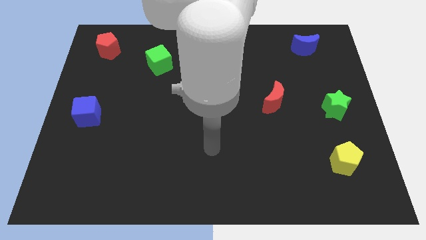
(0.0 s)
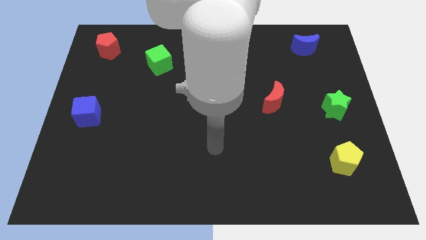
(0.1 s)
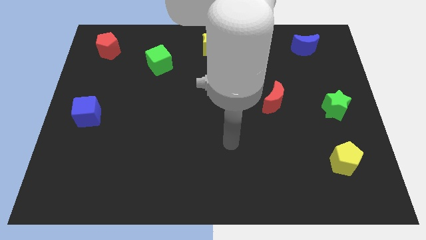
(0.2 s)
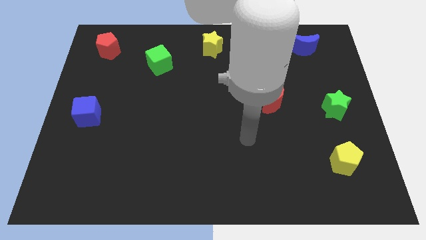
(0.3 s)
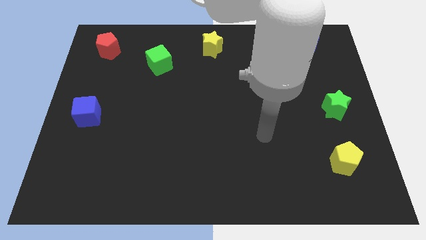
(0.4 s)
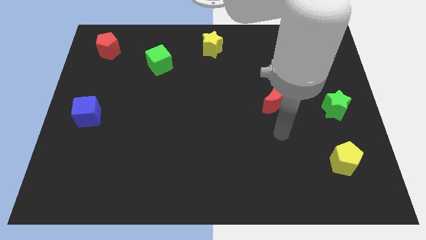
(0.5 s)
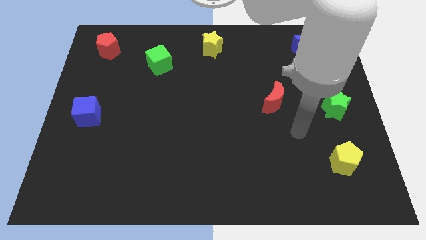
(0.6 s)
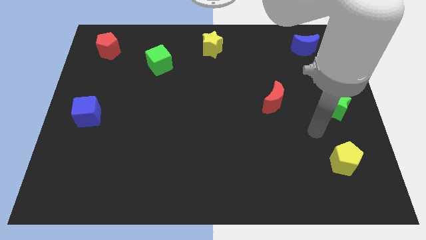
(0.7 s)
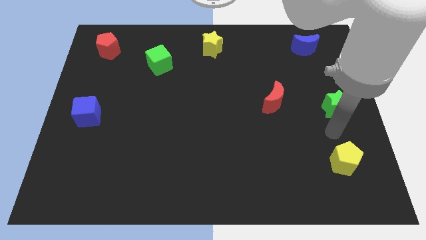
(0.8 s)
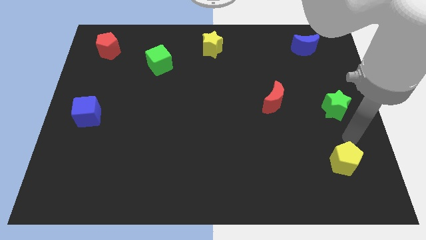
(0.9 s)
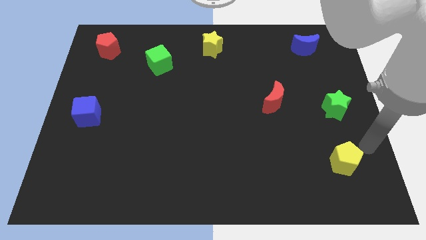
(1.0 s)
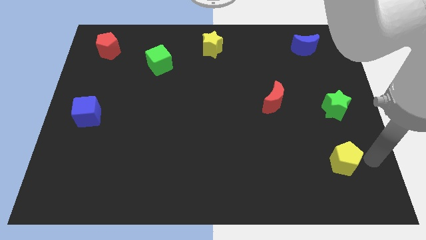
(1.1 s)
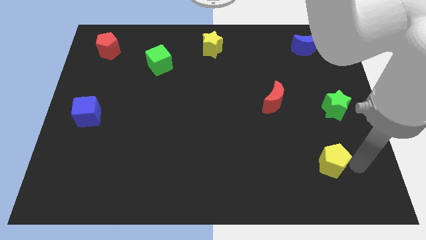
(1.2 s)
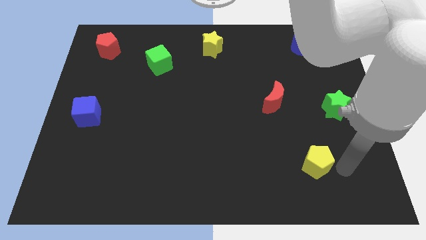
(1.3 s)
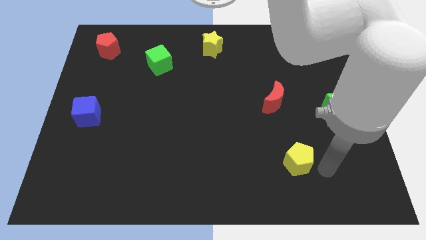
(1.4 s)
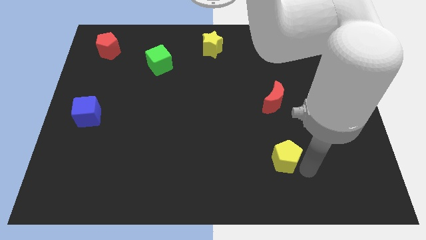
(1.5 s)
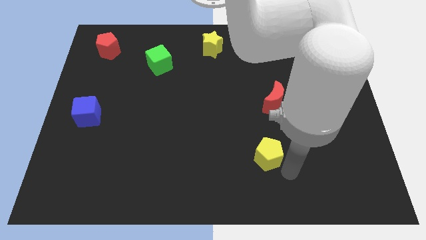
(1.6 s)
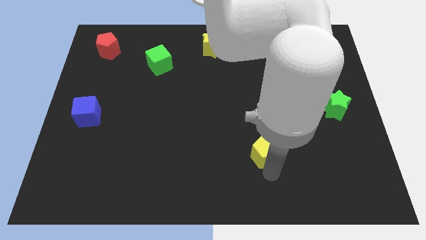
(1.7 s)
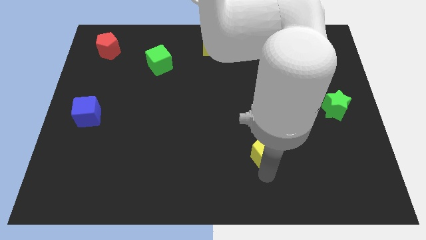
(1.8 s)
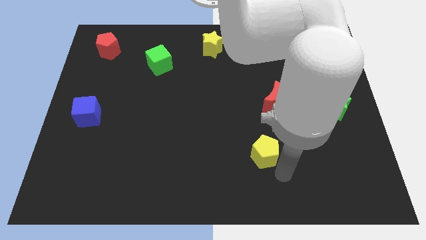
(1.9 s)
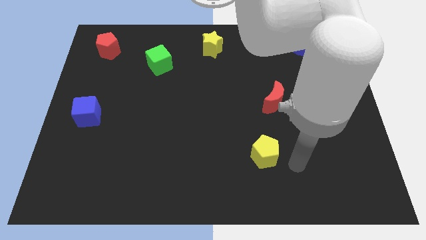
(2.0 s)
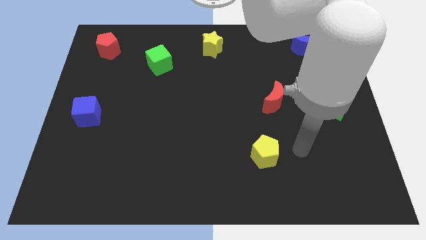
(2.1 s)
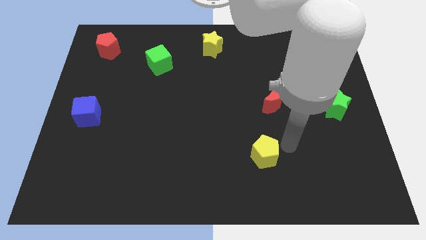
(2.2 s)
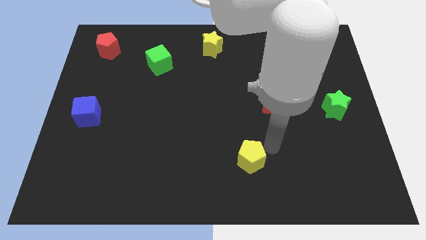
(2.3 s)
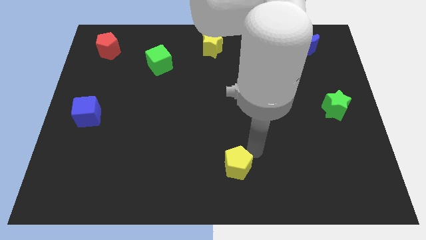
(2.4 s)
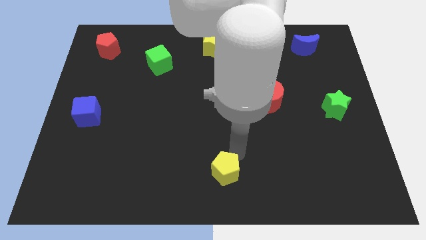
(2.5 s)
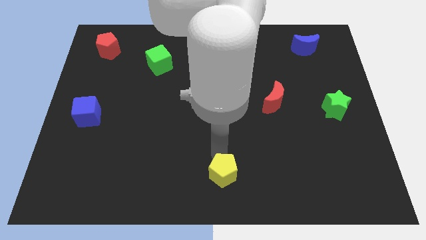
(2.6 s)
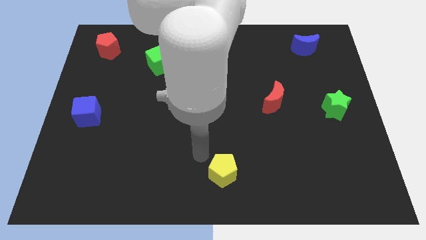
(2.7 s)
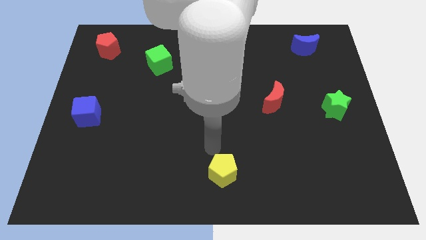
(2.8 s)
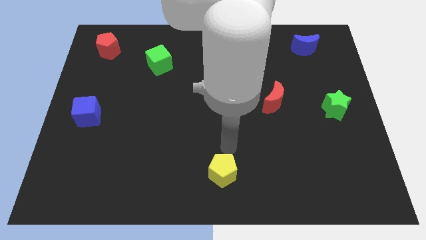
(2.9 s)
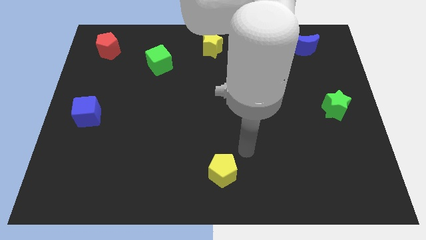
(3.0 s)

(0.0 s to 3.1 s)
slide yellow pentagon towards bottom center

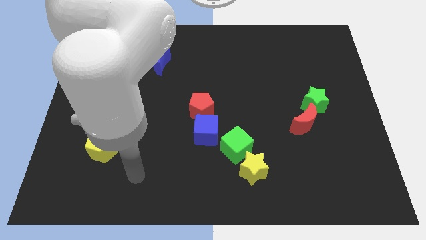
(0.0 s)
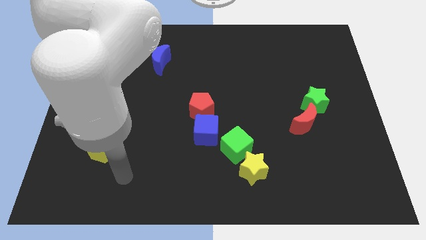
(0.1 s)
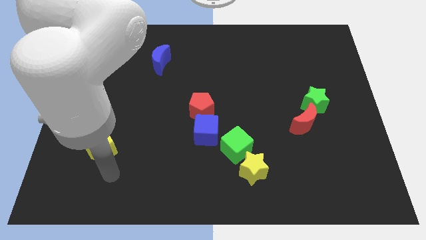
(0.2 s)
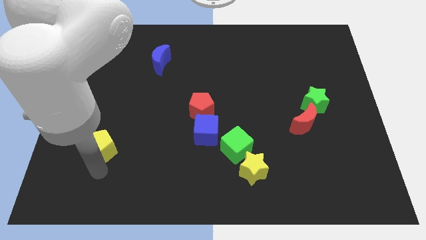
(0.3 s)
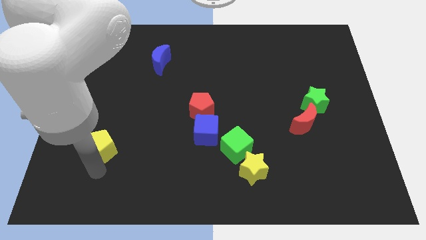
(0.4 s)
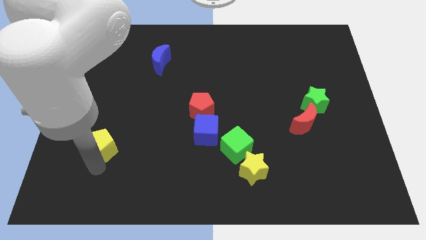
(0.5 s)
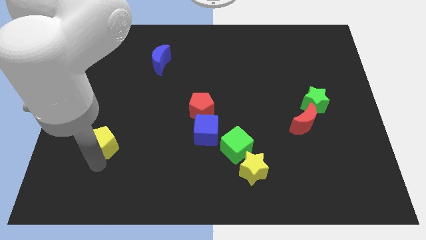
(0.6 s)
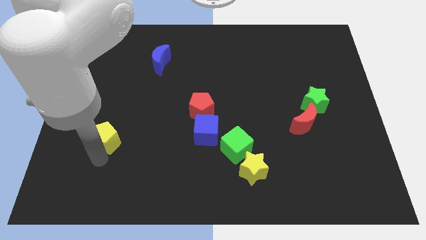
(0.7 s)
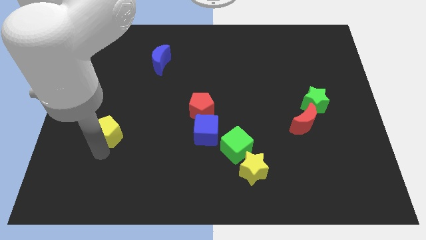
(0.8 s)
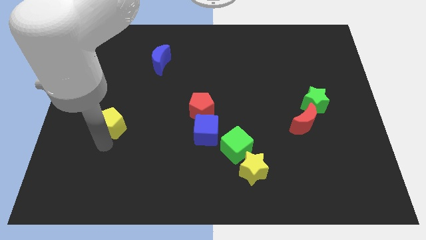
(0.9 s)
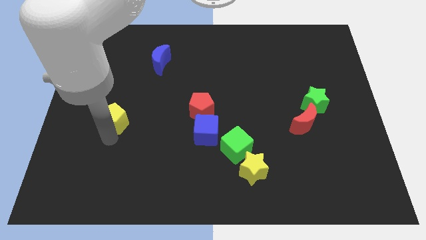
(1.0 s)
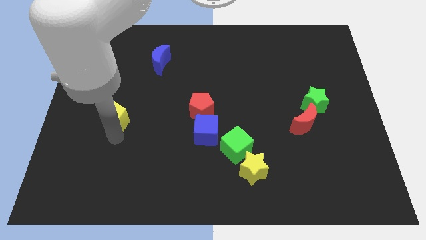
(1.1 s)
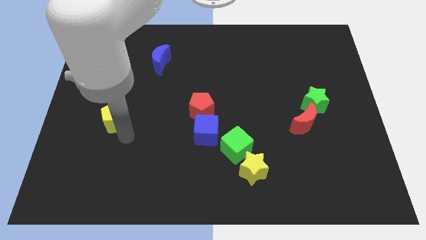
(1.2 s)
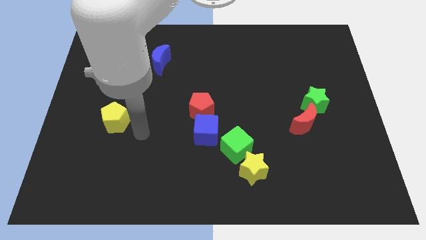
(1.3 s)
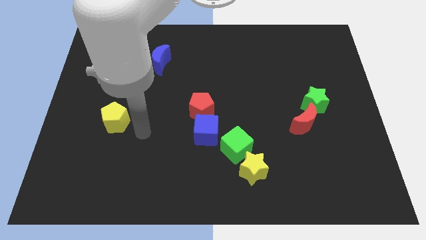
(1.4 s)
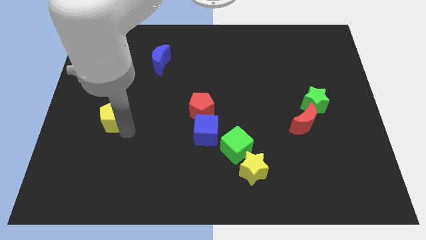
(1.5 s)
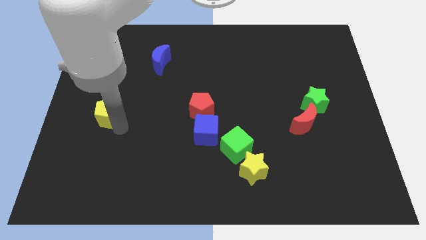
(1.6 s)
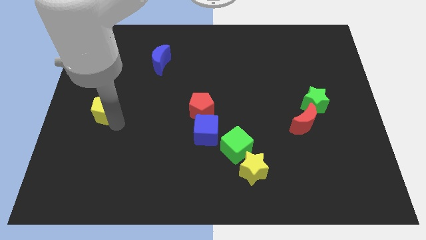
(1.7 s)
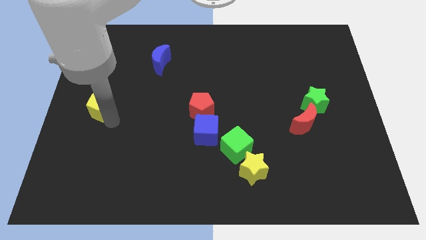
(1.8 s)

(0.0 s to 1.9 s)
place the yellow pentagon parallel to red pentagon

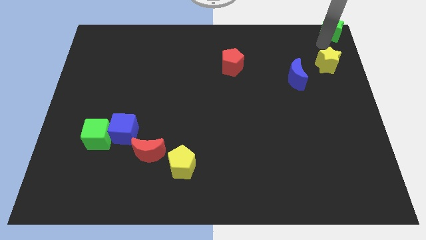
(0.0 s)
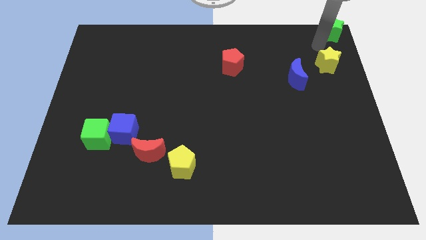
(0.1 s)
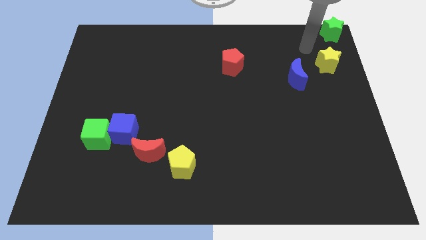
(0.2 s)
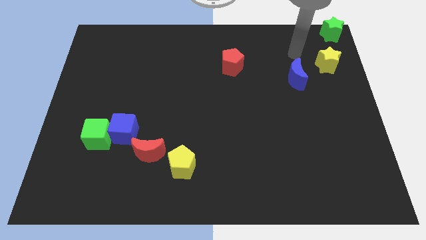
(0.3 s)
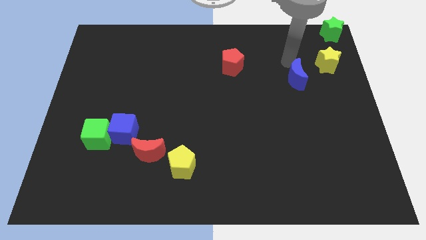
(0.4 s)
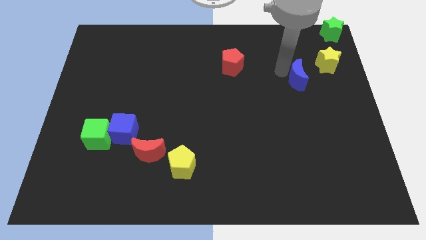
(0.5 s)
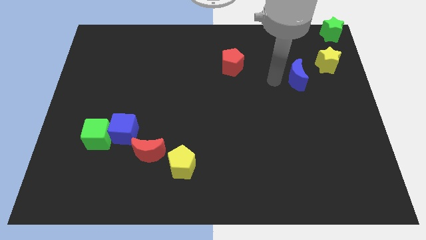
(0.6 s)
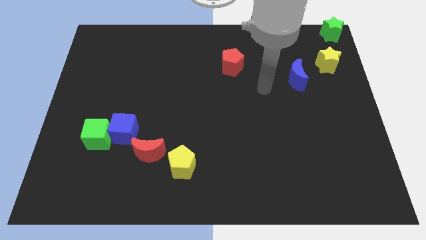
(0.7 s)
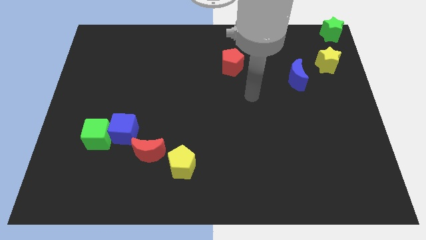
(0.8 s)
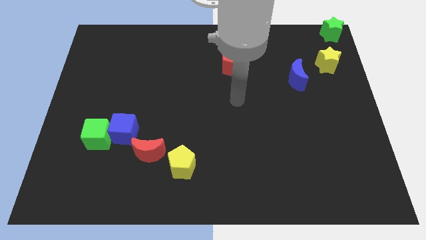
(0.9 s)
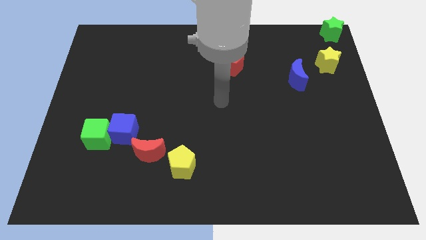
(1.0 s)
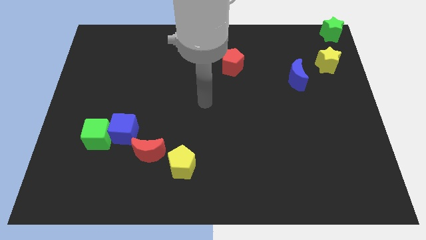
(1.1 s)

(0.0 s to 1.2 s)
touch the blue moon at the left side

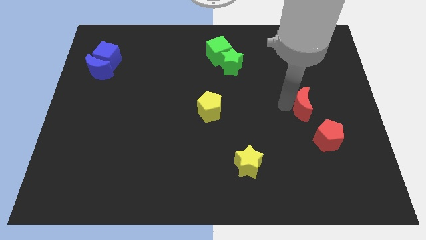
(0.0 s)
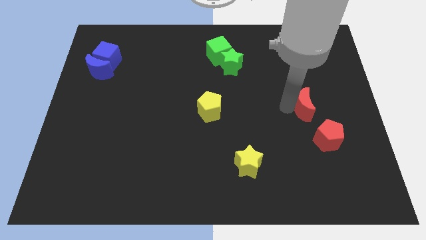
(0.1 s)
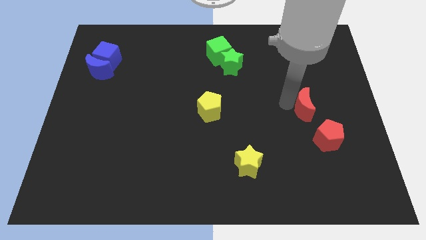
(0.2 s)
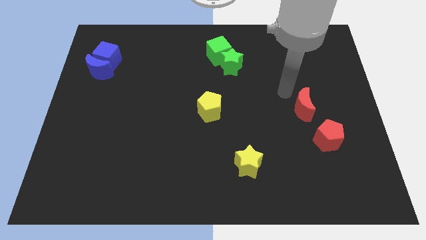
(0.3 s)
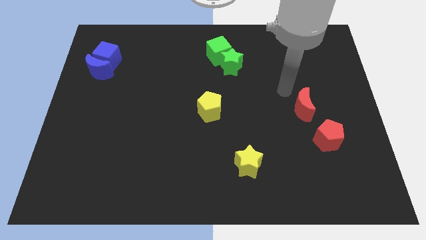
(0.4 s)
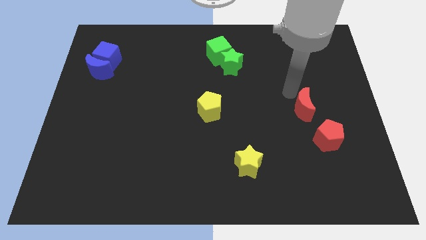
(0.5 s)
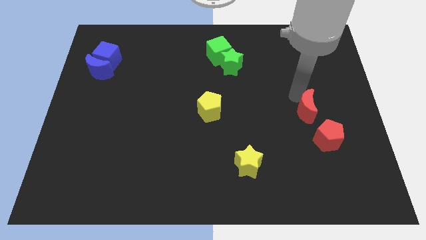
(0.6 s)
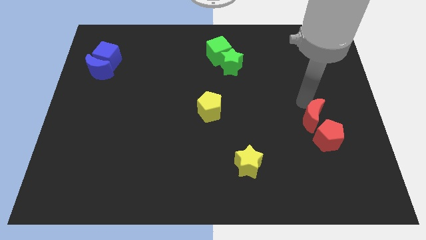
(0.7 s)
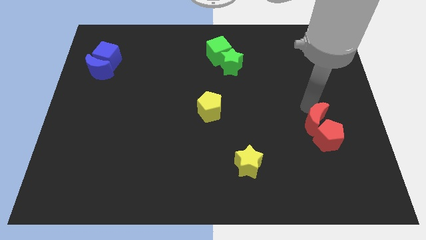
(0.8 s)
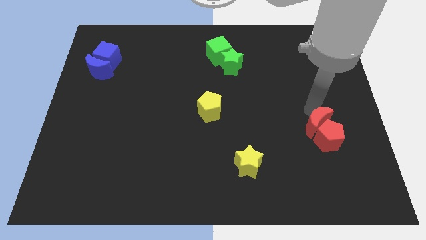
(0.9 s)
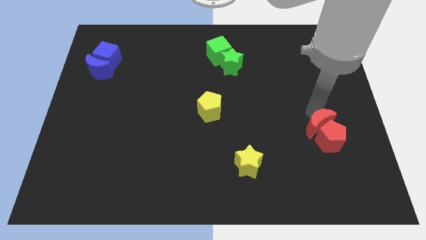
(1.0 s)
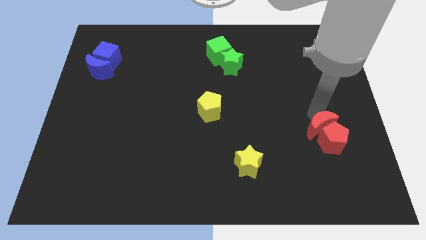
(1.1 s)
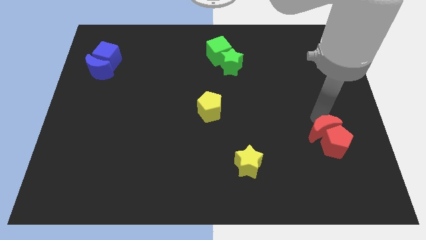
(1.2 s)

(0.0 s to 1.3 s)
push the red moon into the red pentagon

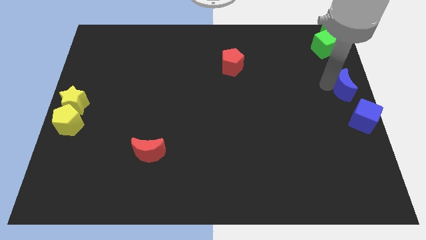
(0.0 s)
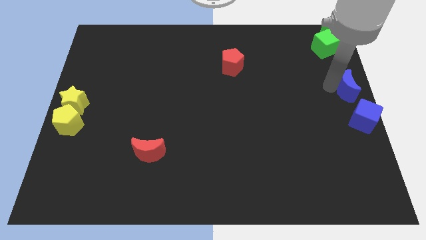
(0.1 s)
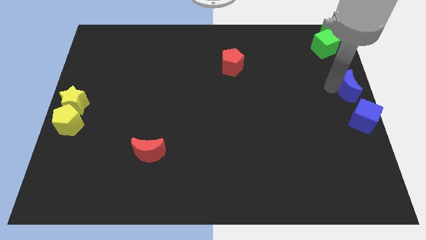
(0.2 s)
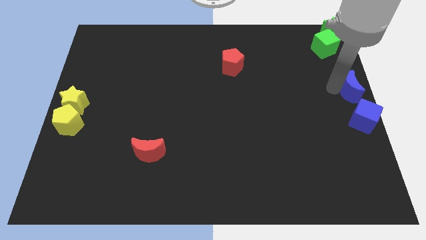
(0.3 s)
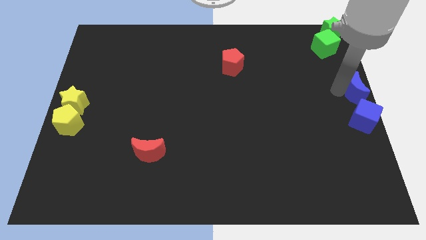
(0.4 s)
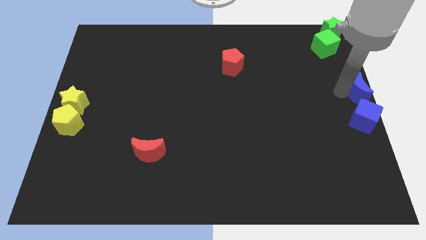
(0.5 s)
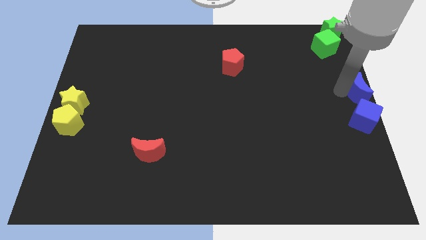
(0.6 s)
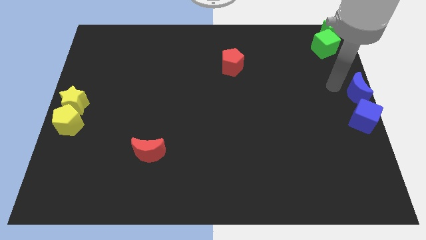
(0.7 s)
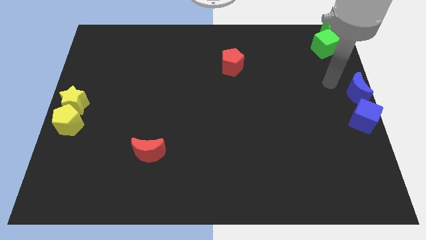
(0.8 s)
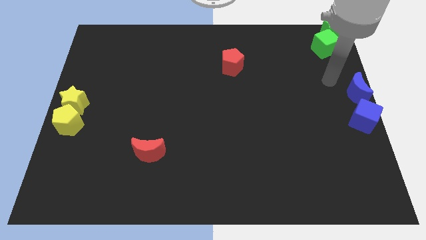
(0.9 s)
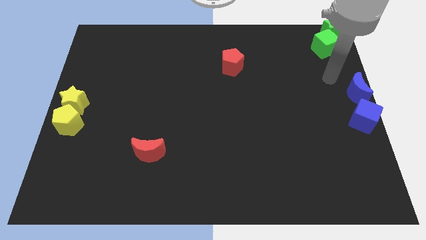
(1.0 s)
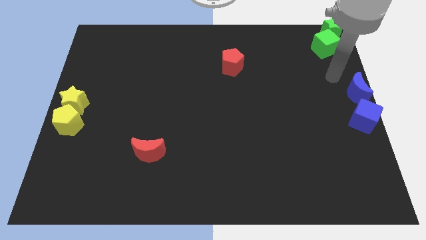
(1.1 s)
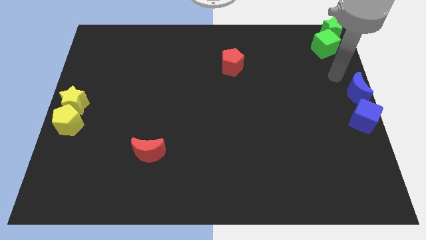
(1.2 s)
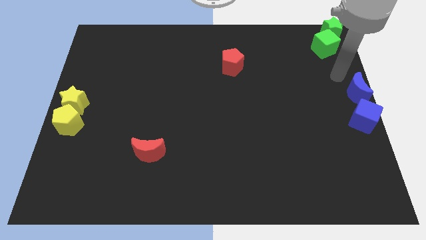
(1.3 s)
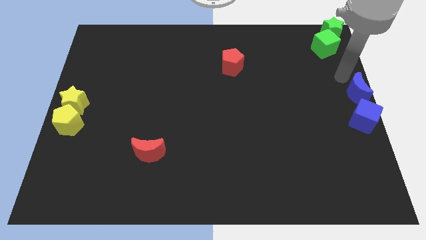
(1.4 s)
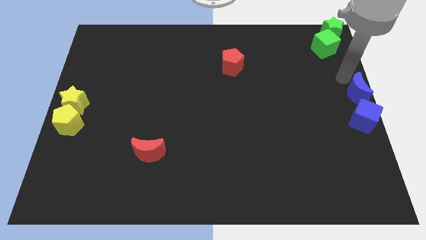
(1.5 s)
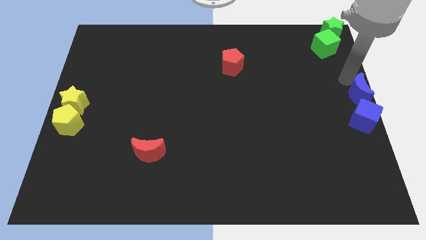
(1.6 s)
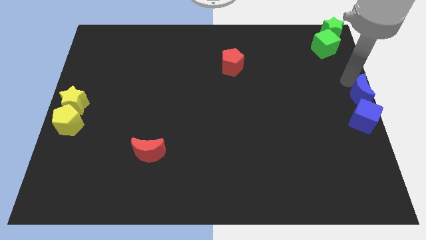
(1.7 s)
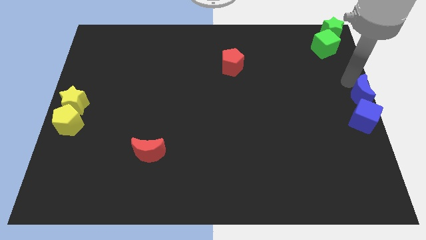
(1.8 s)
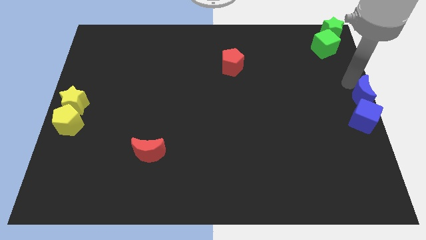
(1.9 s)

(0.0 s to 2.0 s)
place the blue moon at the top of blue cube
